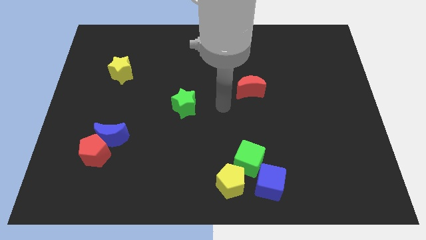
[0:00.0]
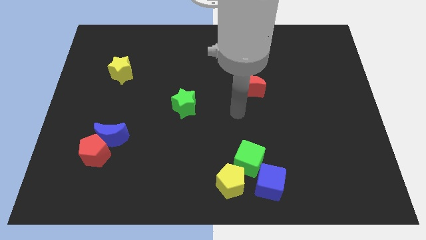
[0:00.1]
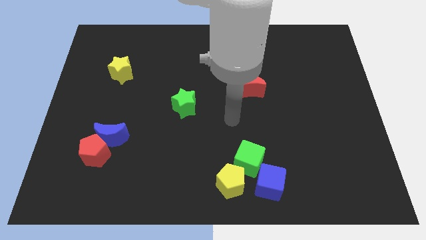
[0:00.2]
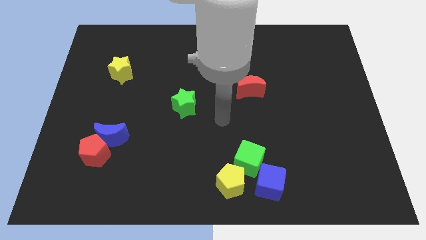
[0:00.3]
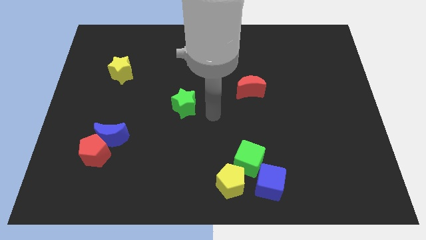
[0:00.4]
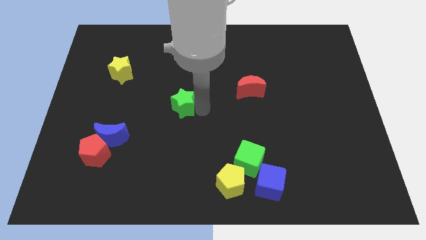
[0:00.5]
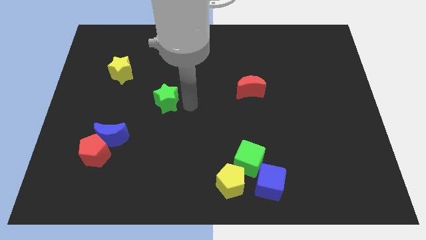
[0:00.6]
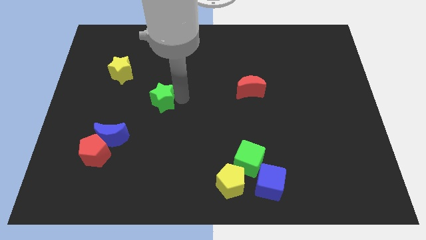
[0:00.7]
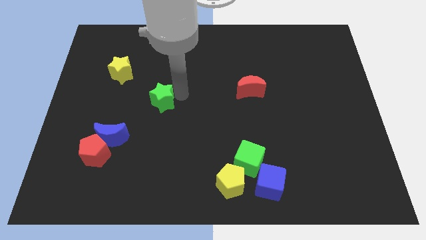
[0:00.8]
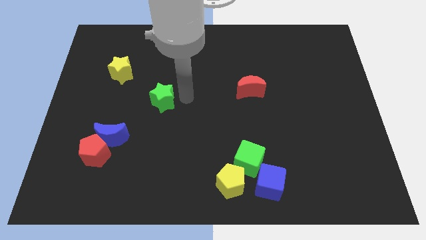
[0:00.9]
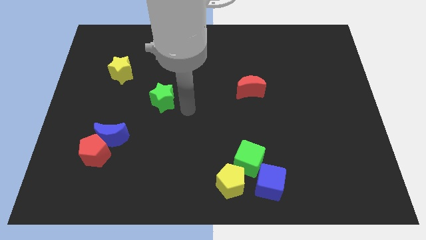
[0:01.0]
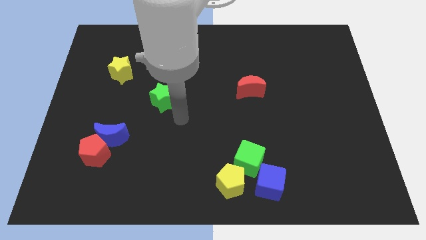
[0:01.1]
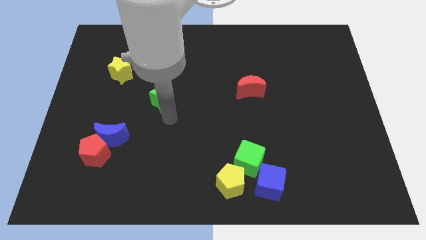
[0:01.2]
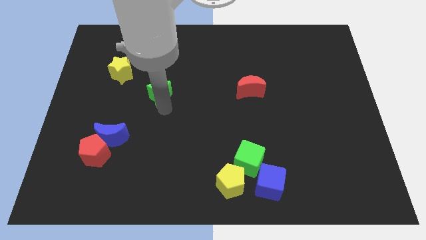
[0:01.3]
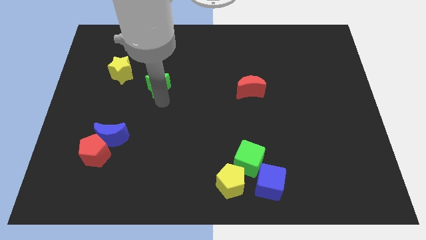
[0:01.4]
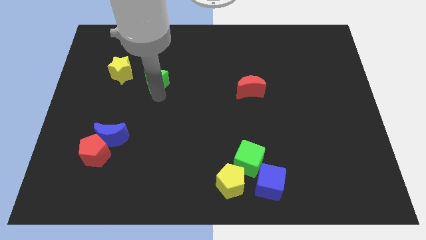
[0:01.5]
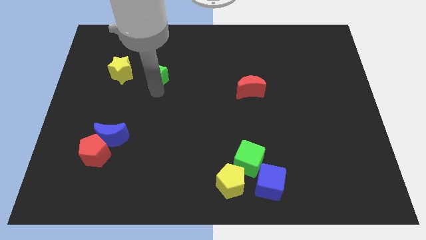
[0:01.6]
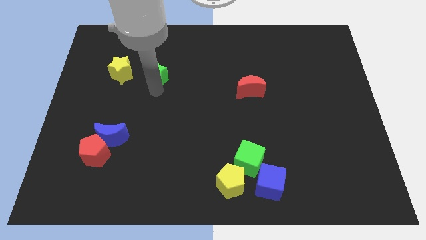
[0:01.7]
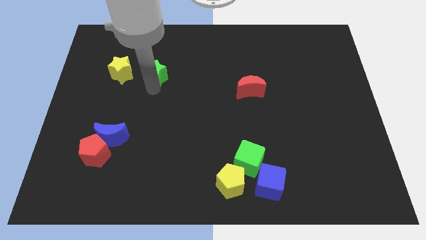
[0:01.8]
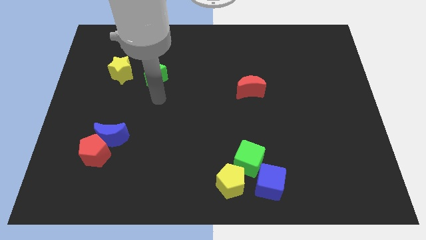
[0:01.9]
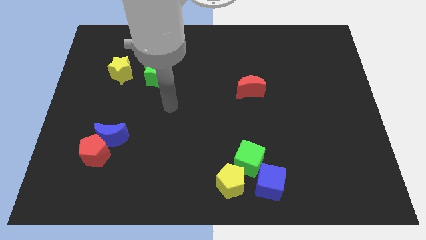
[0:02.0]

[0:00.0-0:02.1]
move green star to the left of the yellow star

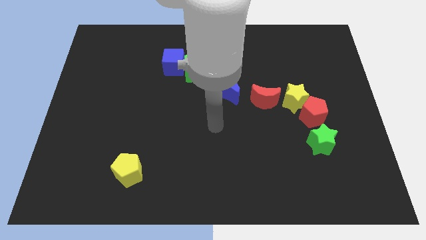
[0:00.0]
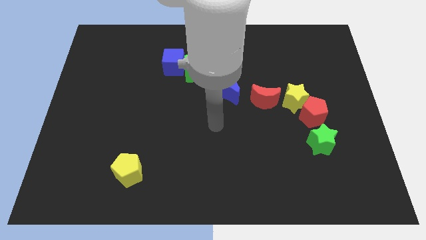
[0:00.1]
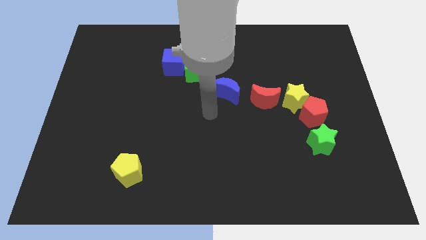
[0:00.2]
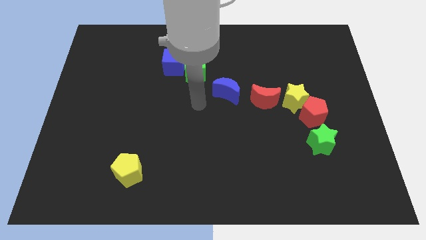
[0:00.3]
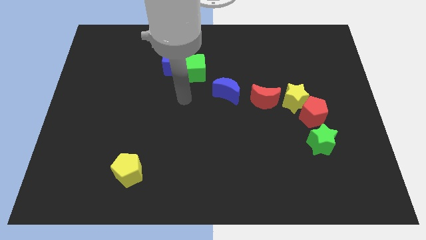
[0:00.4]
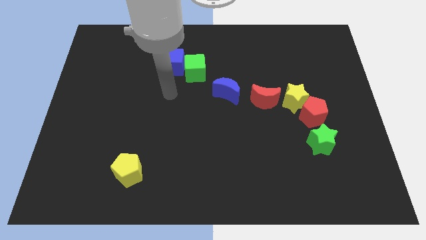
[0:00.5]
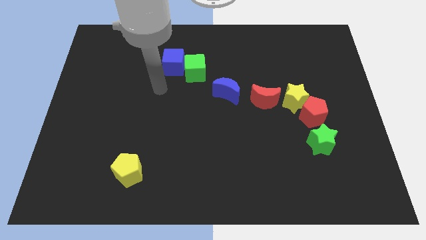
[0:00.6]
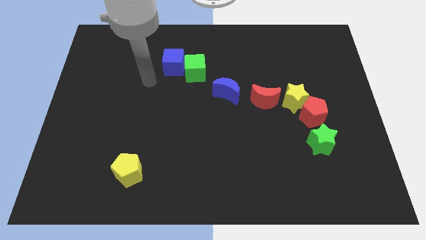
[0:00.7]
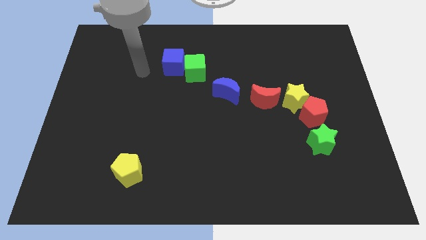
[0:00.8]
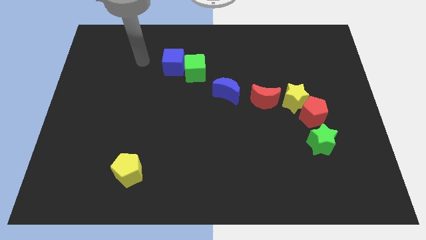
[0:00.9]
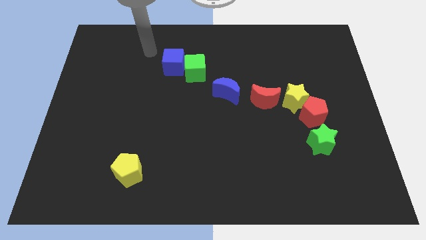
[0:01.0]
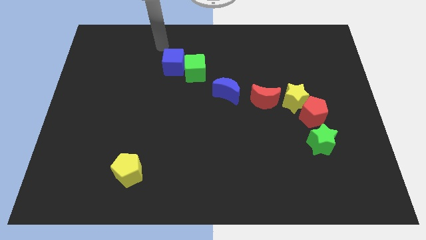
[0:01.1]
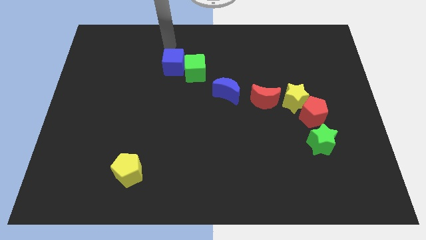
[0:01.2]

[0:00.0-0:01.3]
move the arm towards the top left side of the blue cube

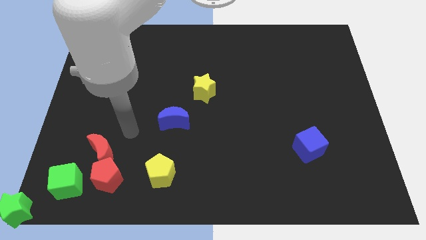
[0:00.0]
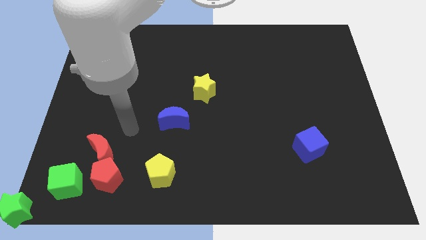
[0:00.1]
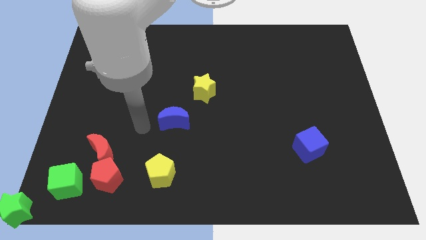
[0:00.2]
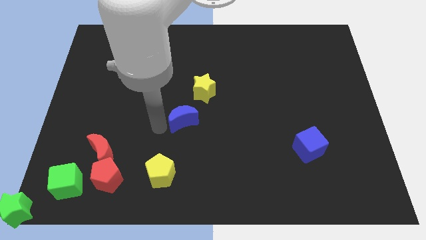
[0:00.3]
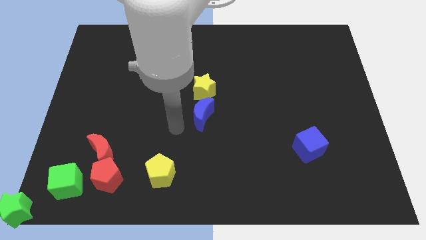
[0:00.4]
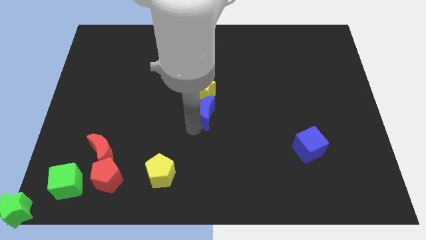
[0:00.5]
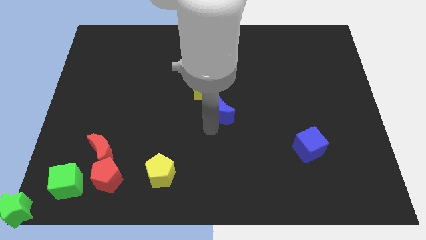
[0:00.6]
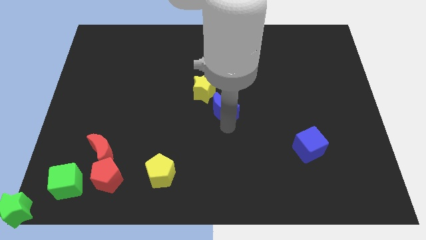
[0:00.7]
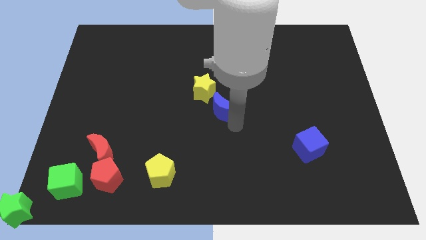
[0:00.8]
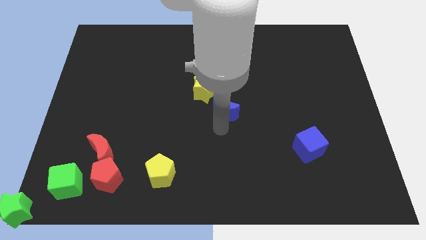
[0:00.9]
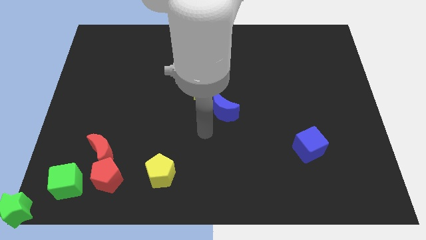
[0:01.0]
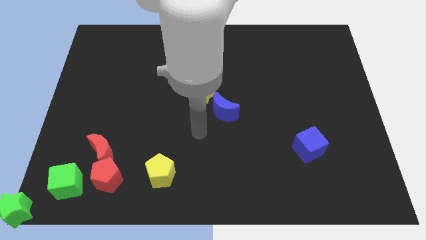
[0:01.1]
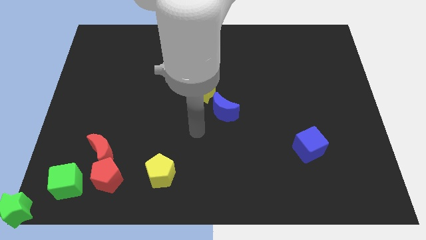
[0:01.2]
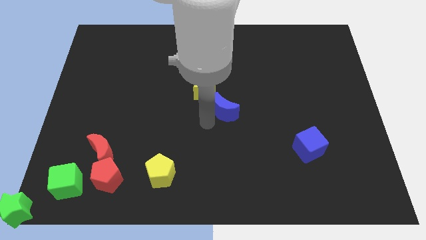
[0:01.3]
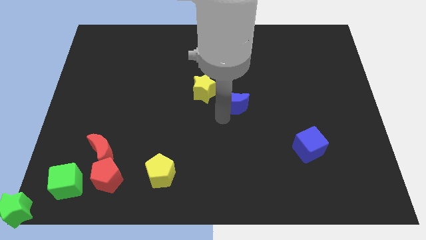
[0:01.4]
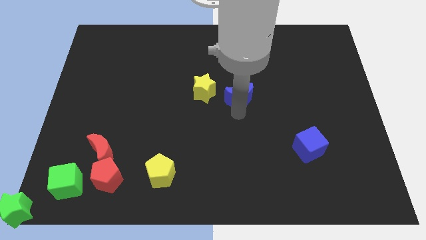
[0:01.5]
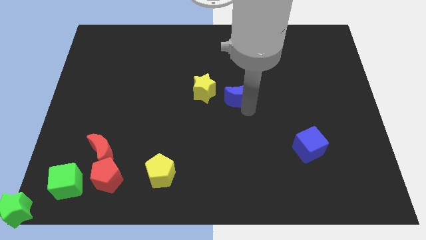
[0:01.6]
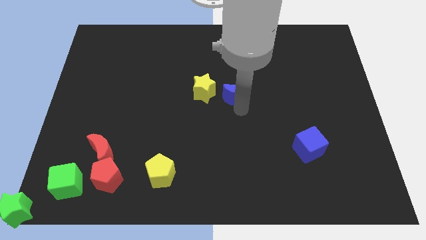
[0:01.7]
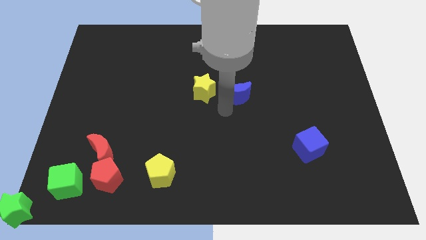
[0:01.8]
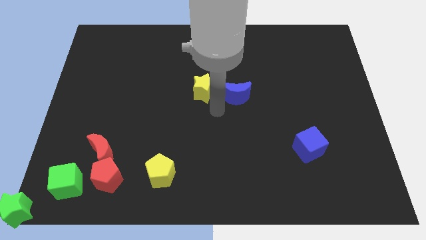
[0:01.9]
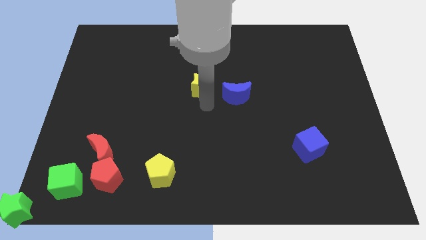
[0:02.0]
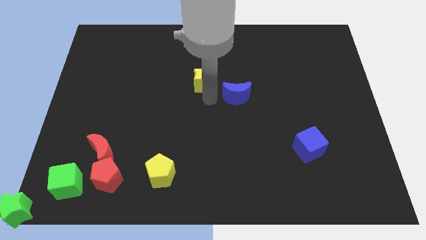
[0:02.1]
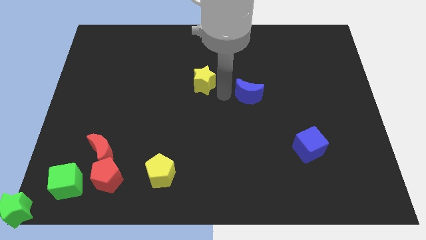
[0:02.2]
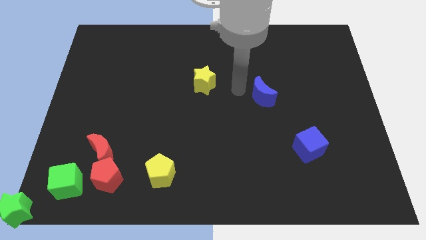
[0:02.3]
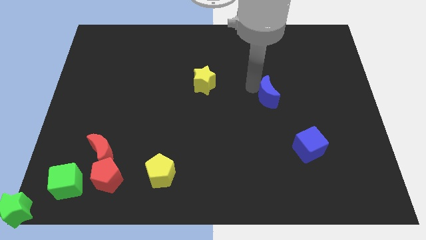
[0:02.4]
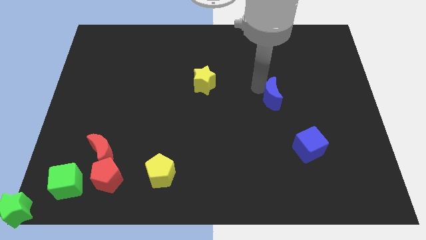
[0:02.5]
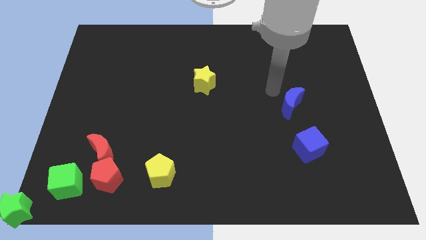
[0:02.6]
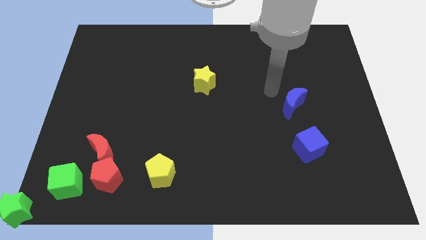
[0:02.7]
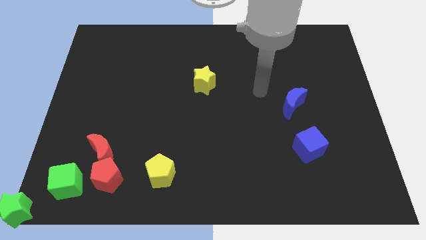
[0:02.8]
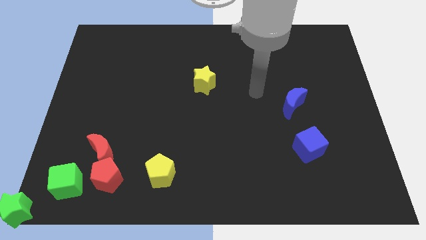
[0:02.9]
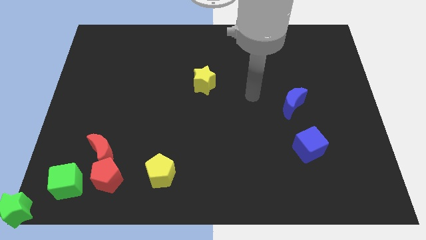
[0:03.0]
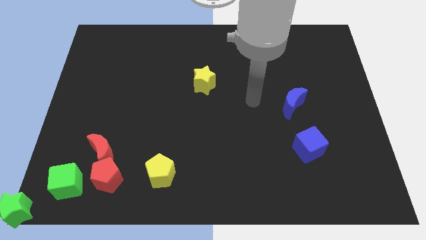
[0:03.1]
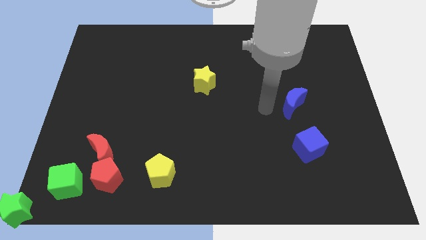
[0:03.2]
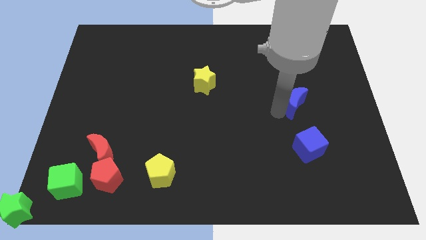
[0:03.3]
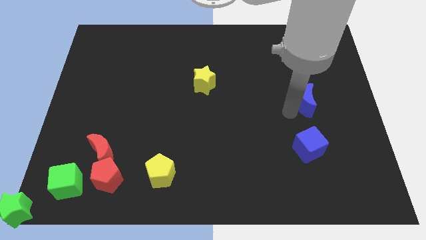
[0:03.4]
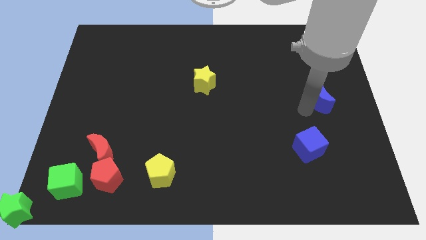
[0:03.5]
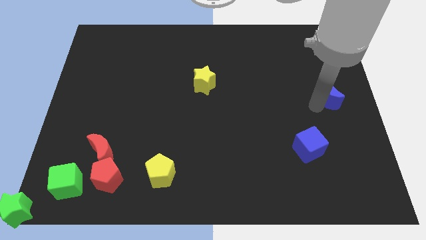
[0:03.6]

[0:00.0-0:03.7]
push the blue moon above the blue cube

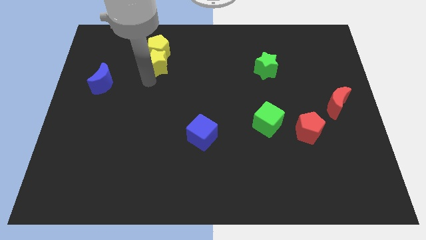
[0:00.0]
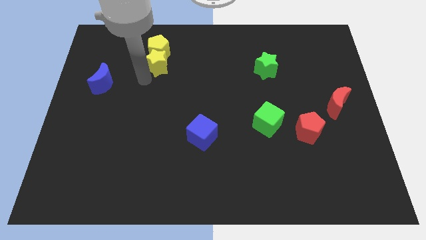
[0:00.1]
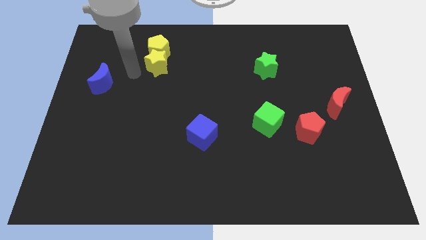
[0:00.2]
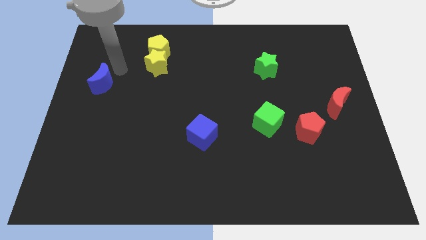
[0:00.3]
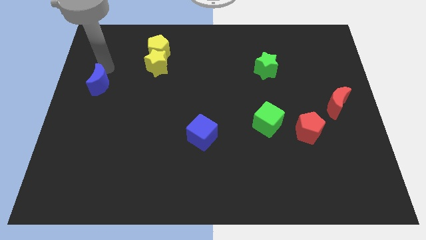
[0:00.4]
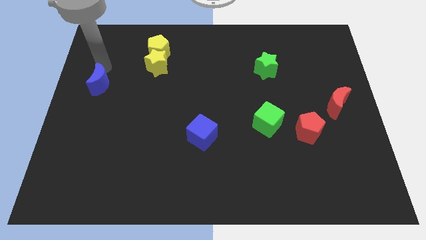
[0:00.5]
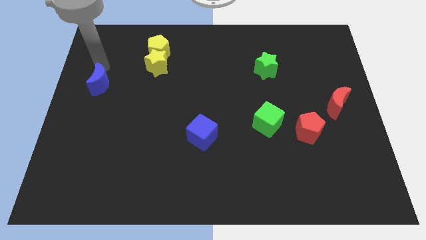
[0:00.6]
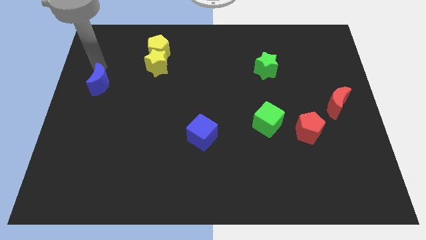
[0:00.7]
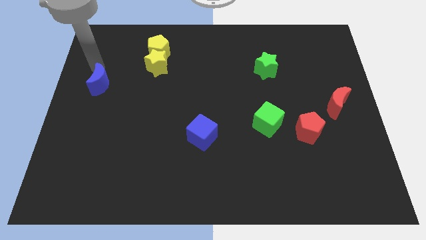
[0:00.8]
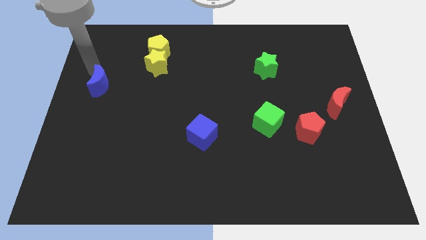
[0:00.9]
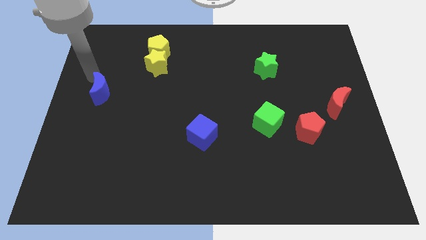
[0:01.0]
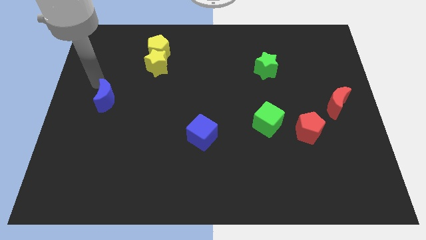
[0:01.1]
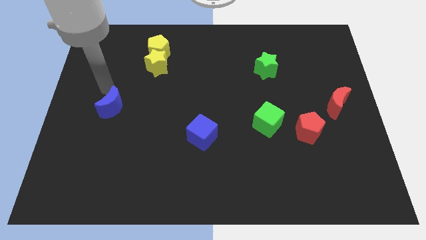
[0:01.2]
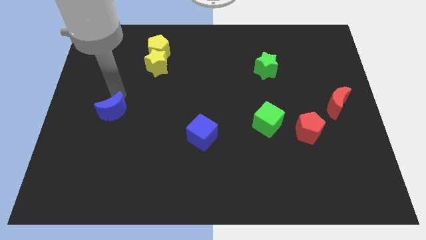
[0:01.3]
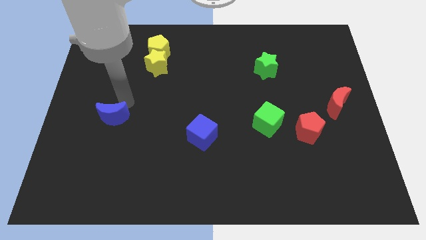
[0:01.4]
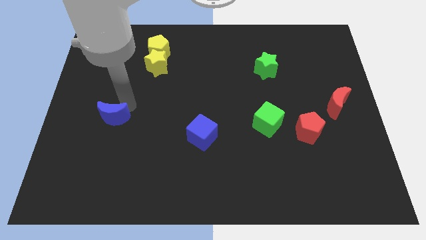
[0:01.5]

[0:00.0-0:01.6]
push the blue moon towards the center of the board

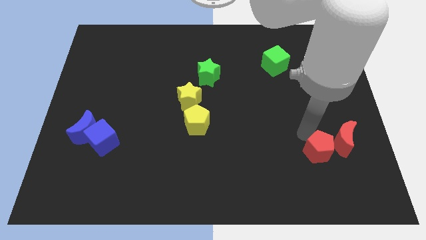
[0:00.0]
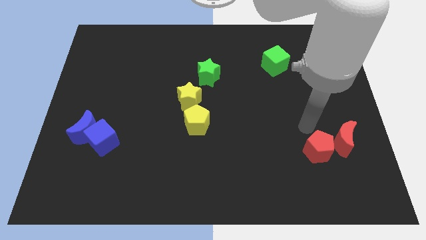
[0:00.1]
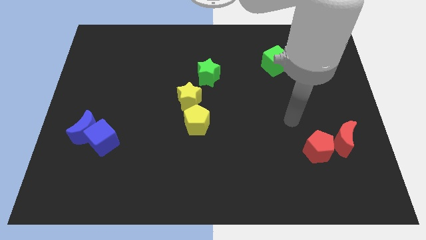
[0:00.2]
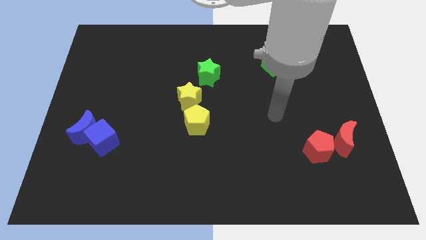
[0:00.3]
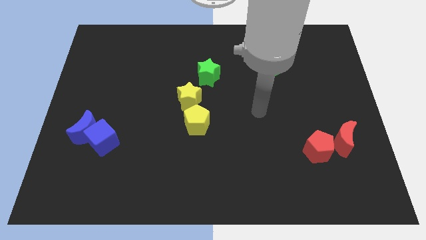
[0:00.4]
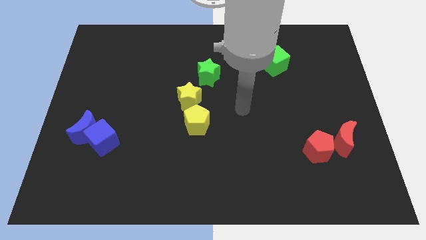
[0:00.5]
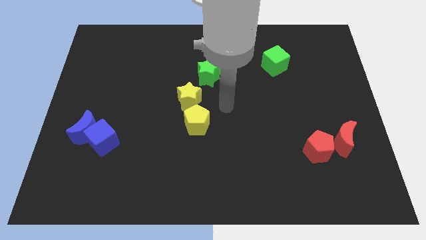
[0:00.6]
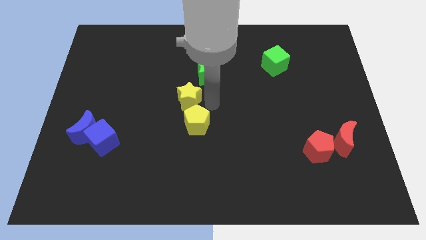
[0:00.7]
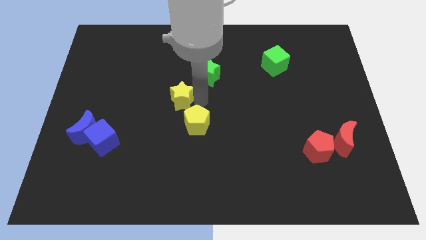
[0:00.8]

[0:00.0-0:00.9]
touch the right of the yellow star
